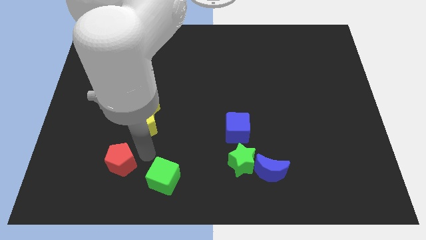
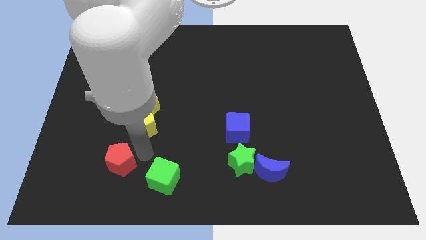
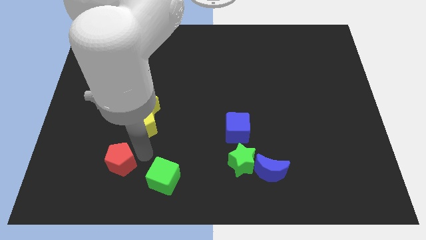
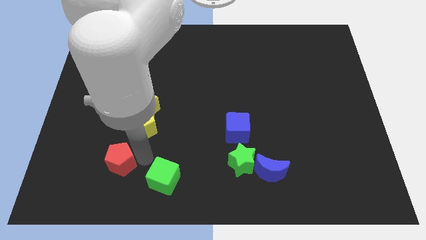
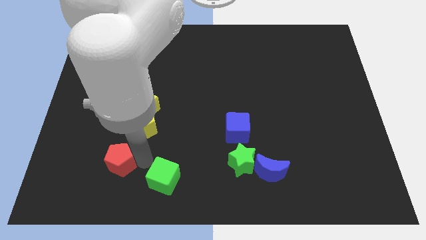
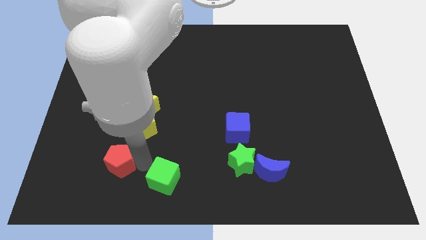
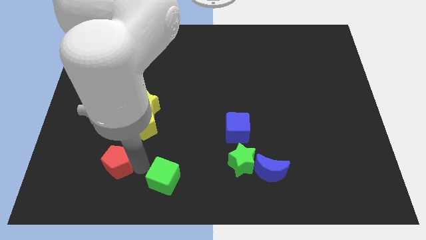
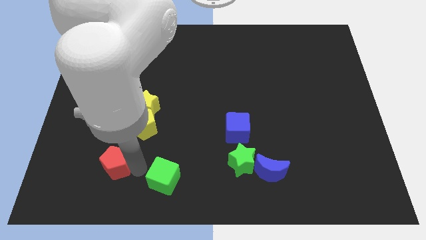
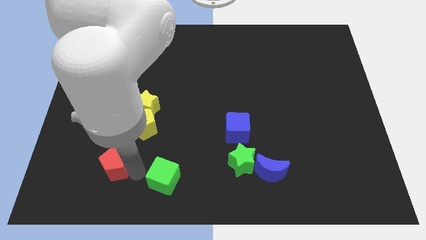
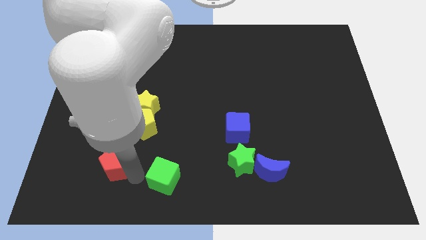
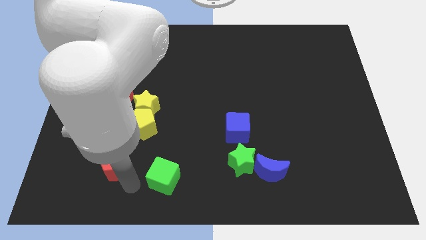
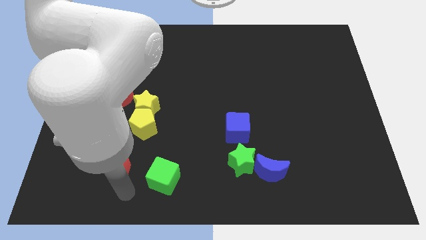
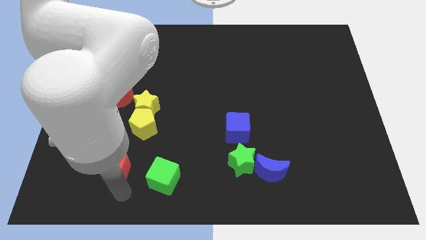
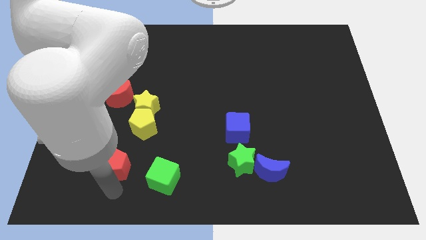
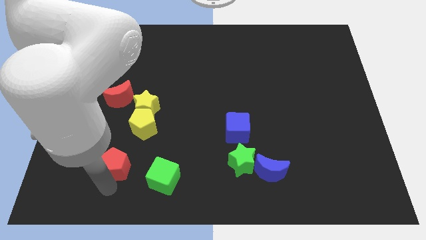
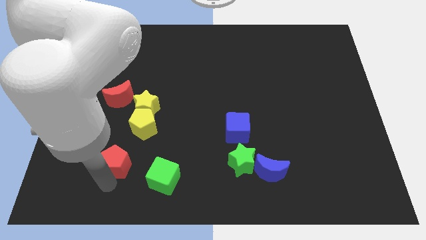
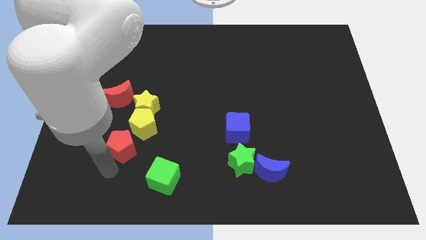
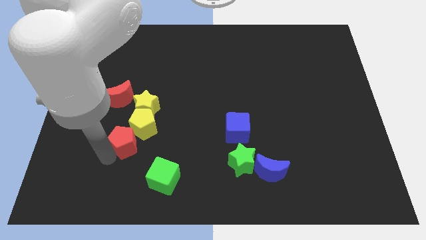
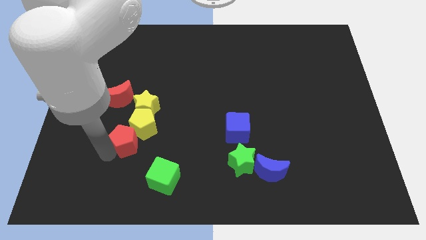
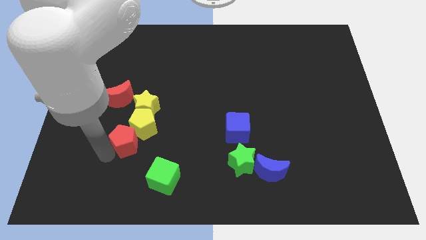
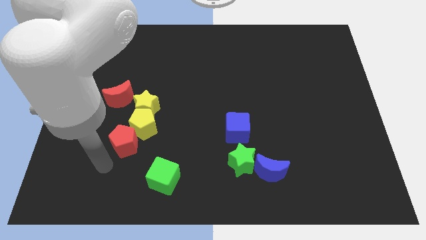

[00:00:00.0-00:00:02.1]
place red pentagon to the bottom left of yellow pentagon

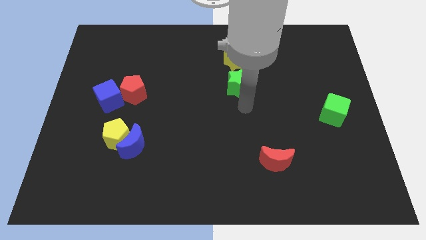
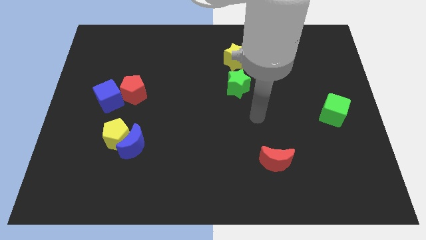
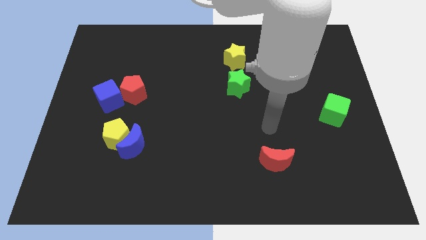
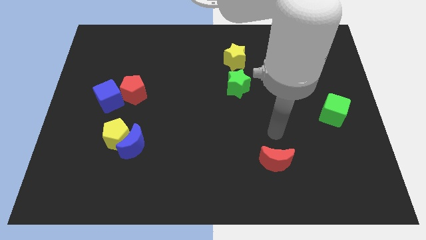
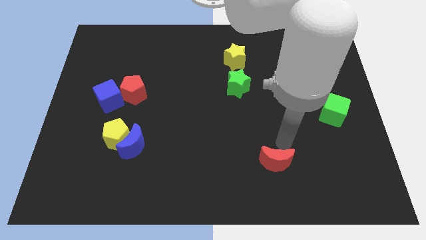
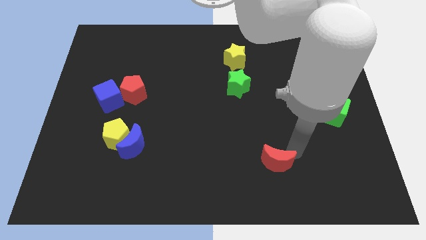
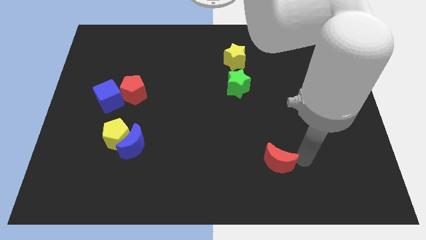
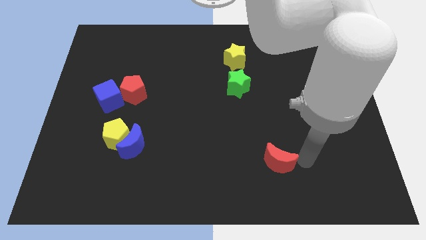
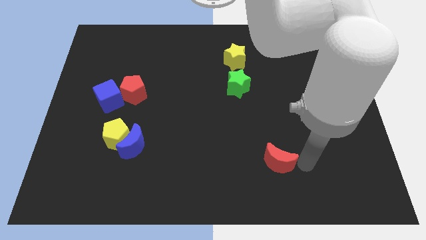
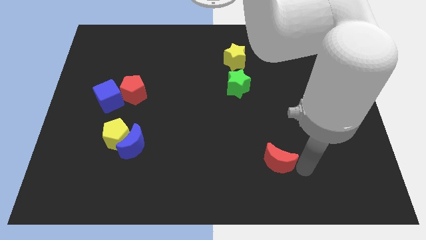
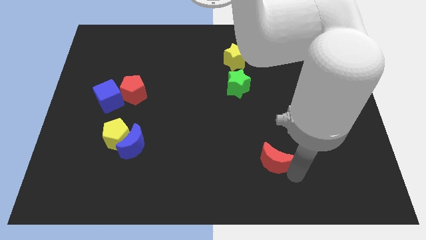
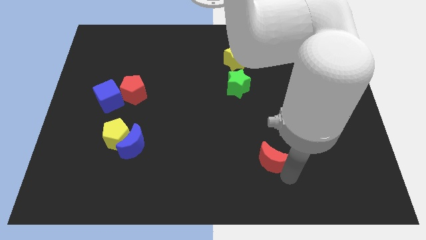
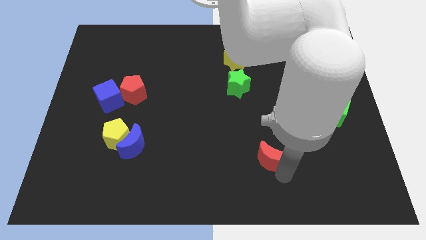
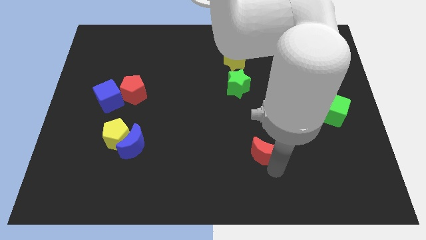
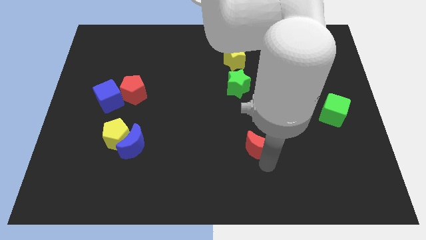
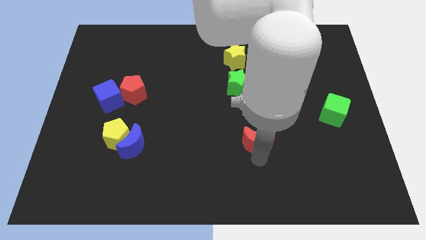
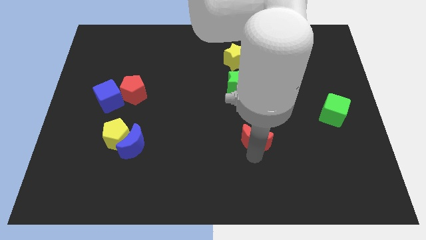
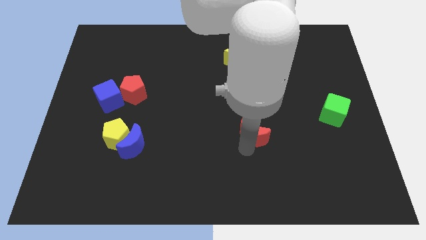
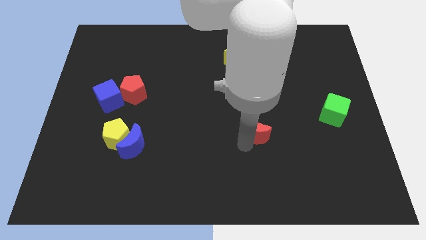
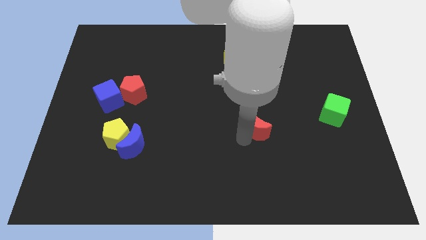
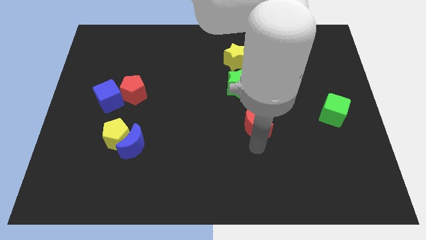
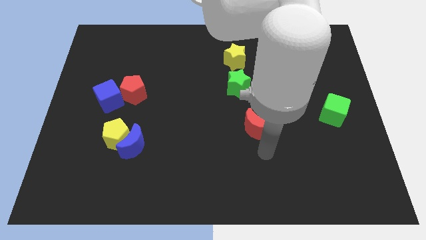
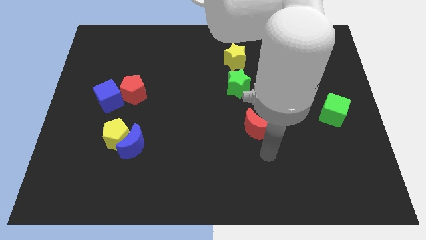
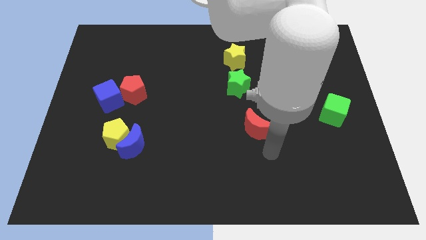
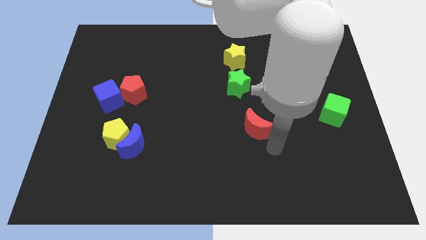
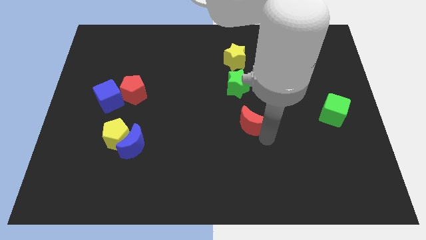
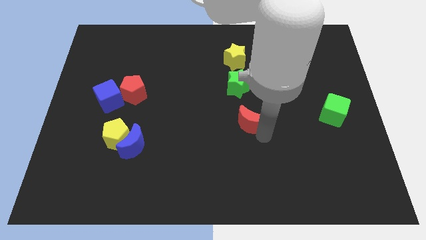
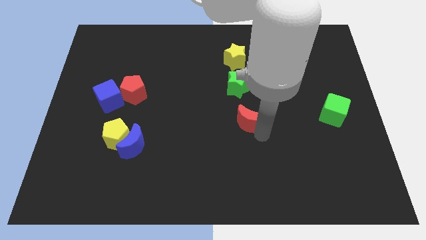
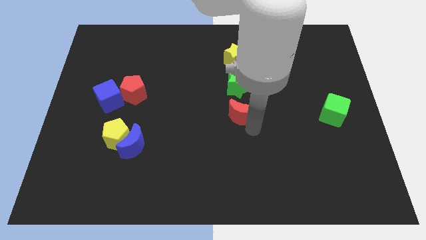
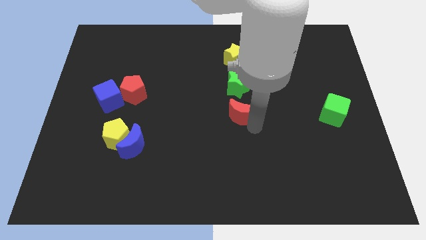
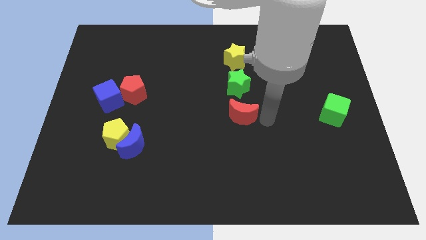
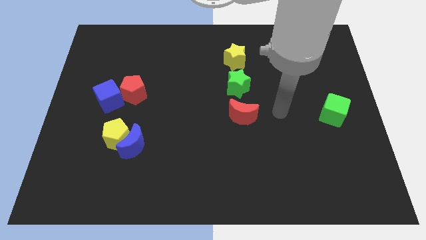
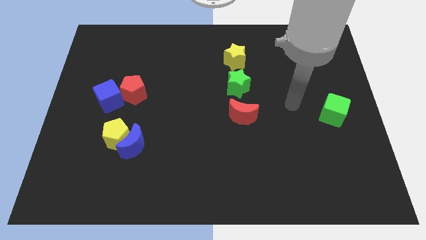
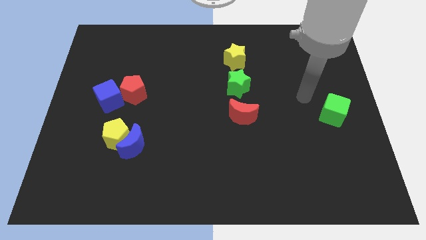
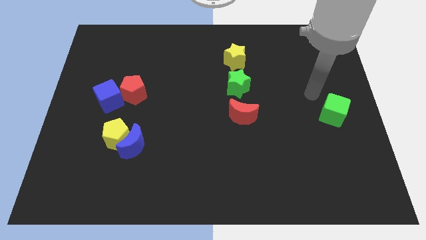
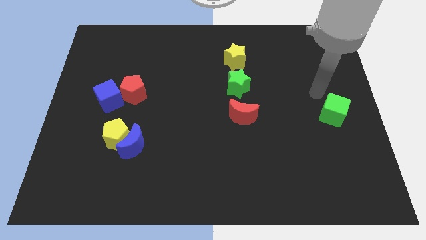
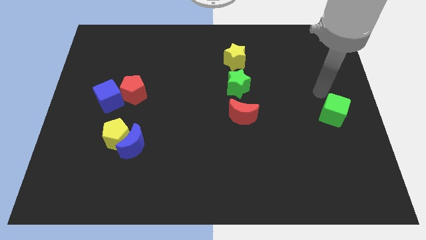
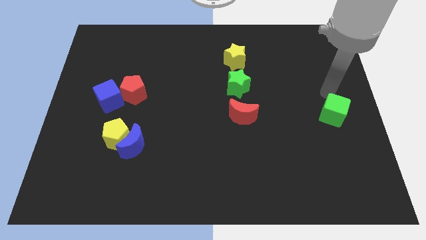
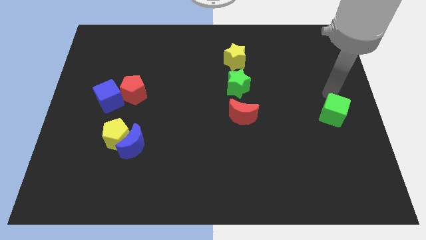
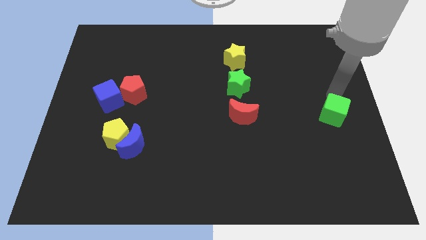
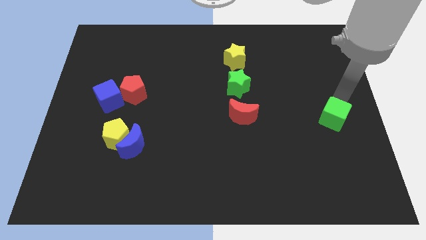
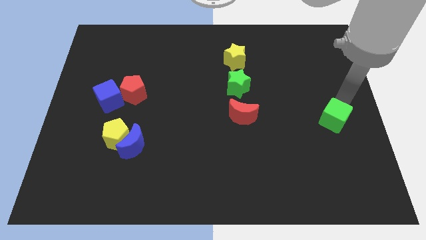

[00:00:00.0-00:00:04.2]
move your arm away from the green star

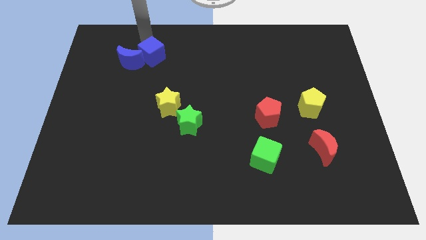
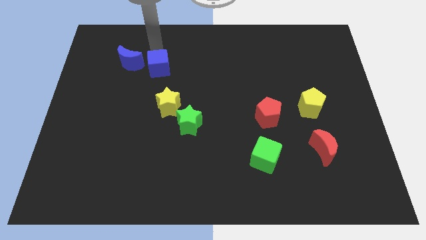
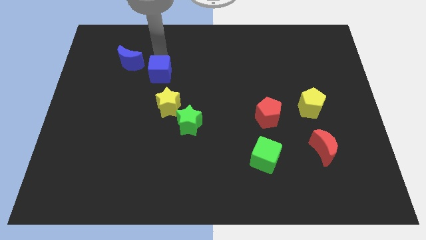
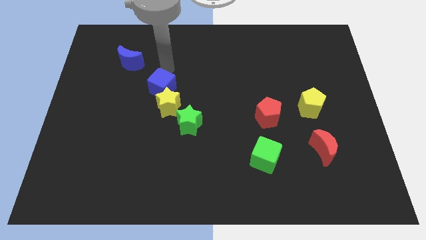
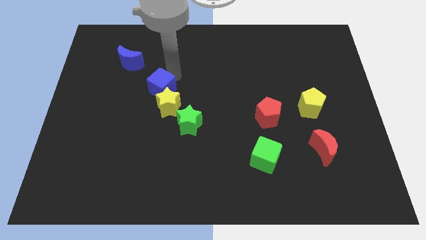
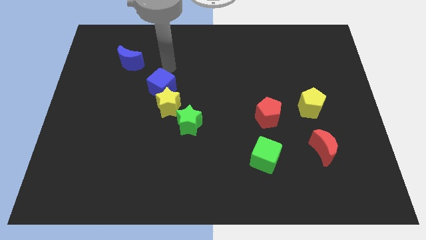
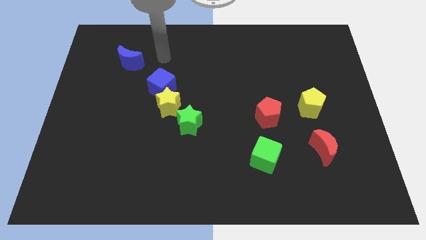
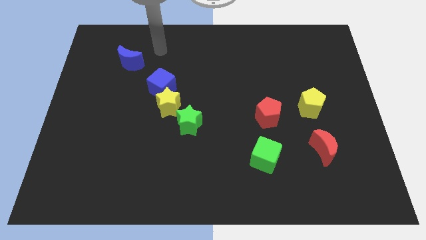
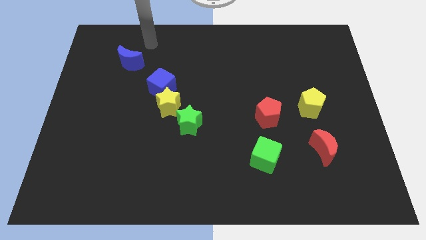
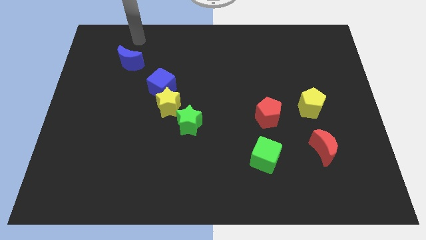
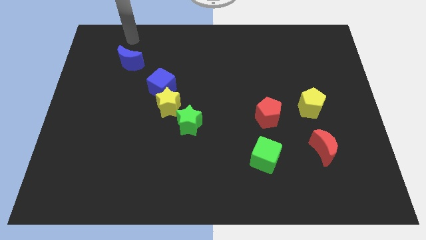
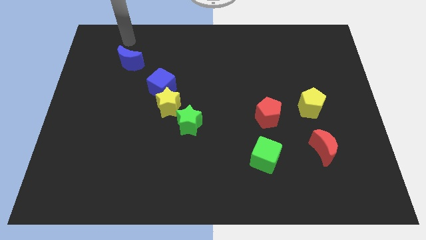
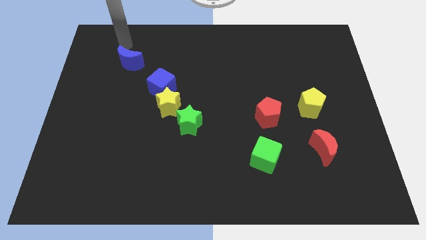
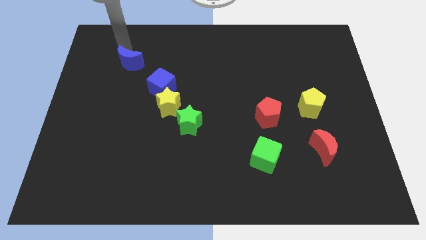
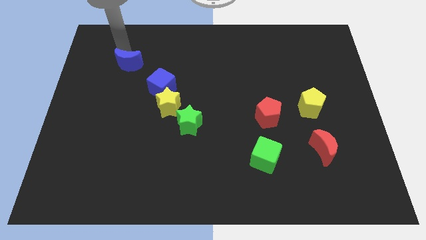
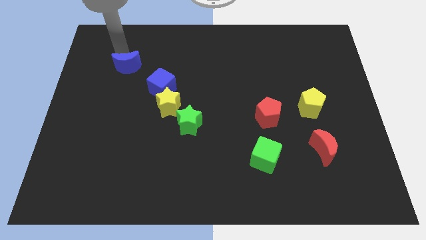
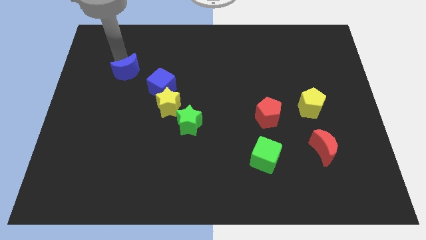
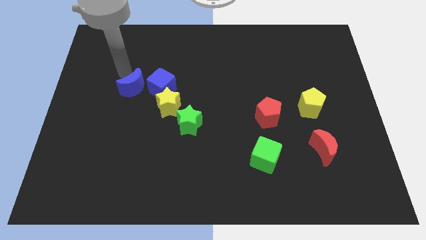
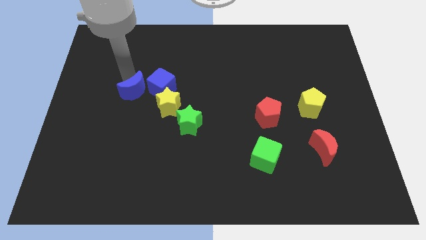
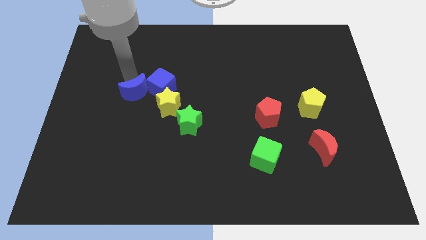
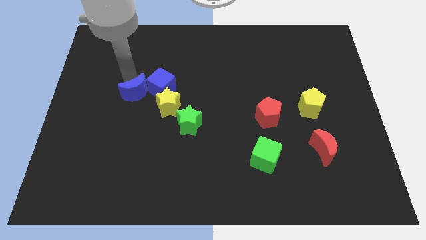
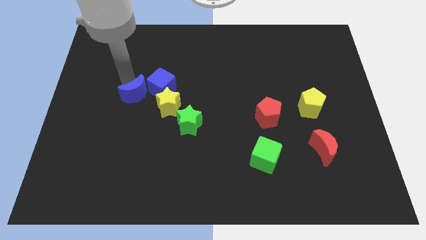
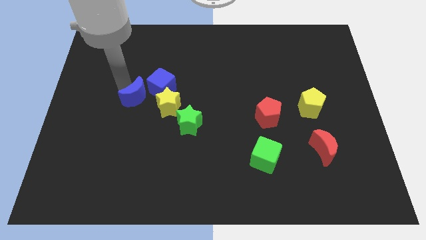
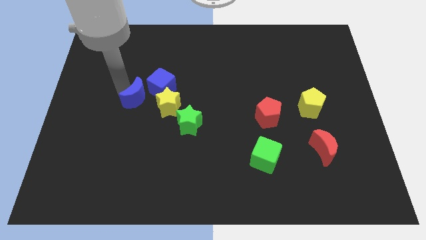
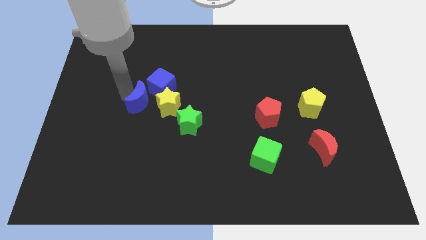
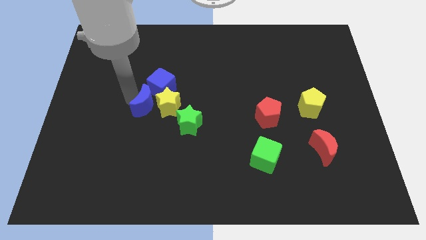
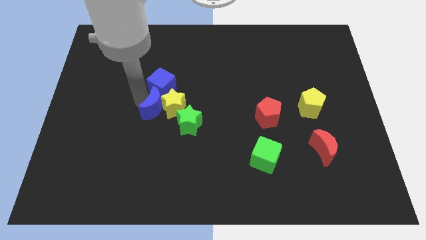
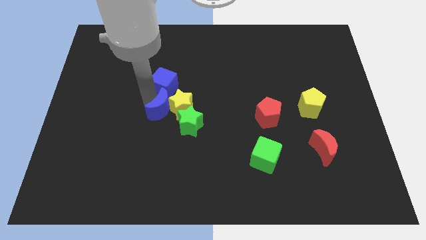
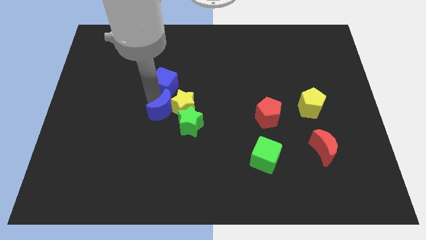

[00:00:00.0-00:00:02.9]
place blue crescent below blue cube
